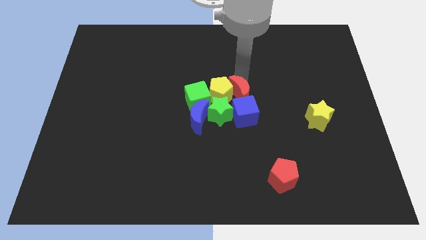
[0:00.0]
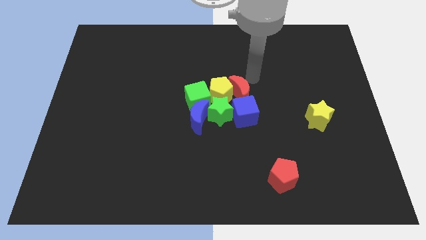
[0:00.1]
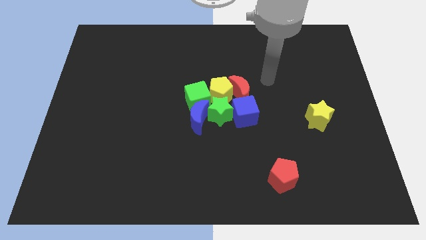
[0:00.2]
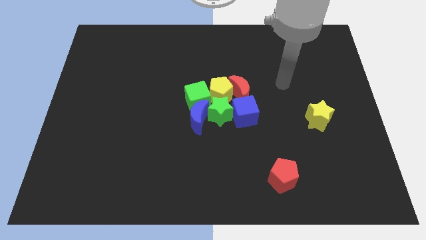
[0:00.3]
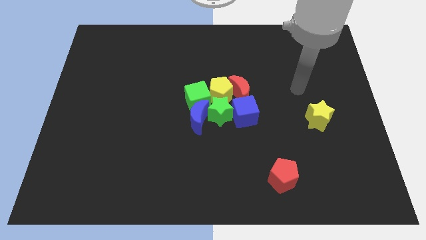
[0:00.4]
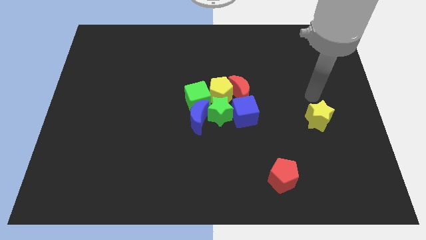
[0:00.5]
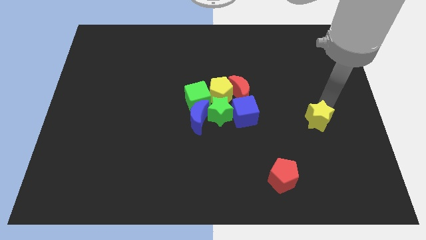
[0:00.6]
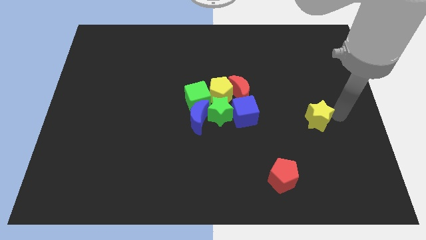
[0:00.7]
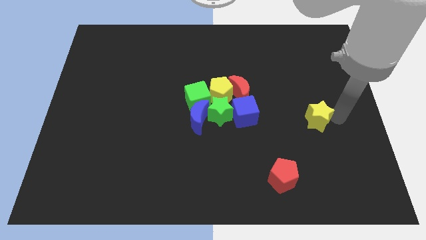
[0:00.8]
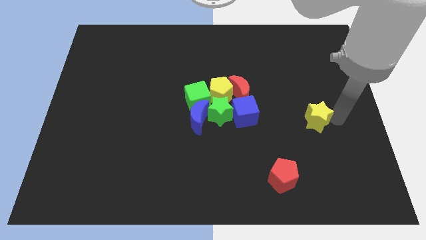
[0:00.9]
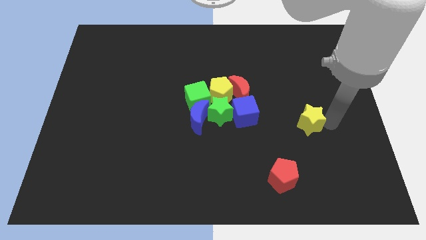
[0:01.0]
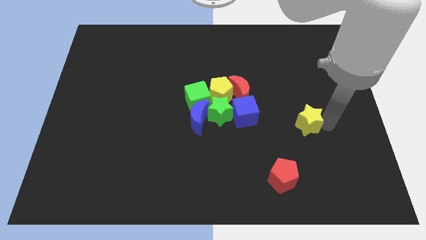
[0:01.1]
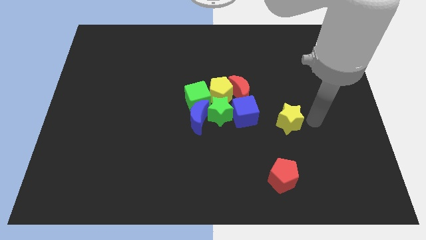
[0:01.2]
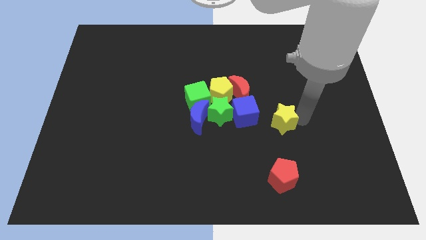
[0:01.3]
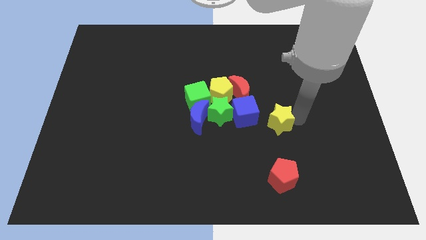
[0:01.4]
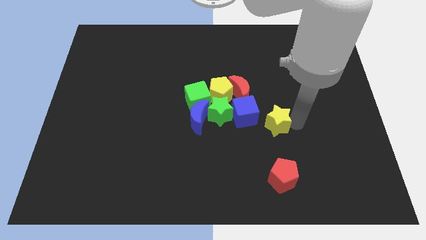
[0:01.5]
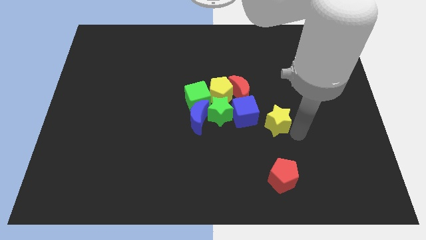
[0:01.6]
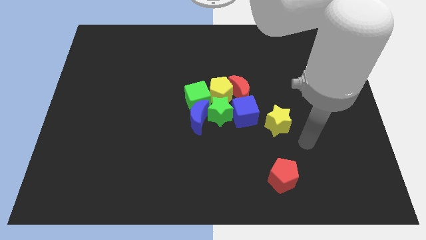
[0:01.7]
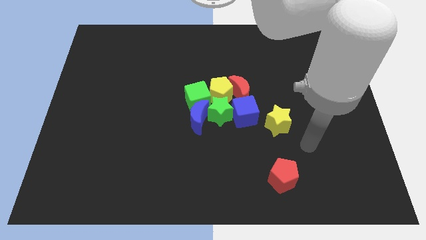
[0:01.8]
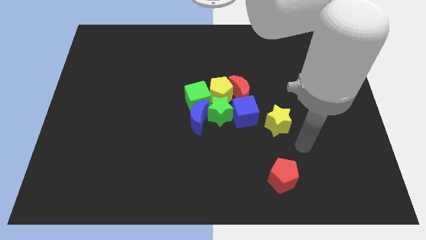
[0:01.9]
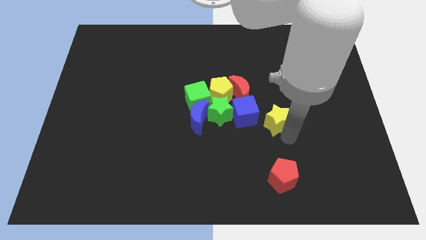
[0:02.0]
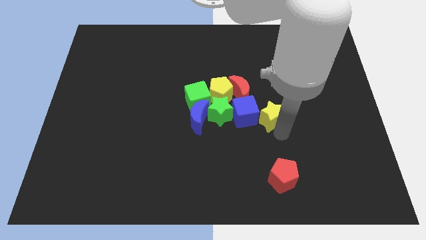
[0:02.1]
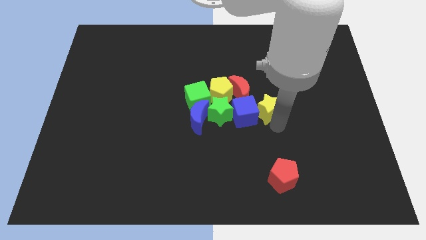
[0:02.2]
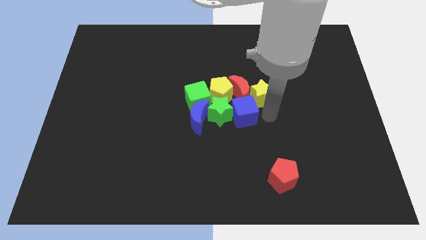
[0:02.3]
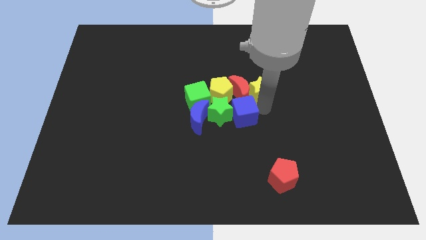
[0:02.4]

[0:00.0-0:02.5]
place the yellow star to the right side of red moon and blue cube

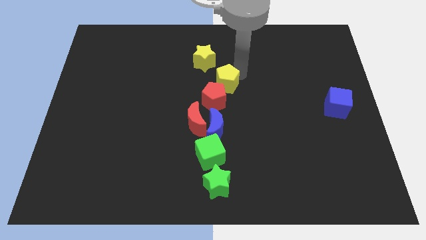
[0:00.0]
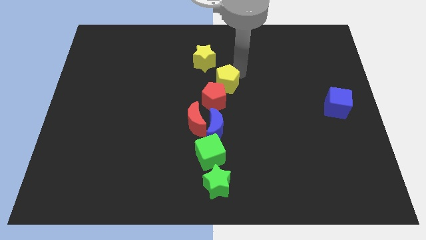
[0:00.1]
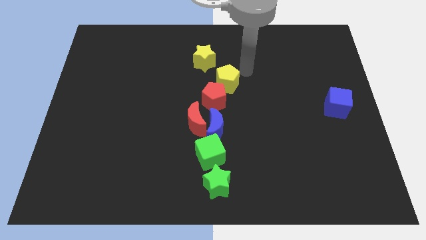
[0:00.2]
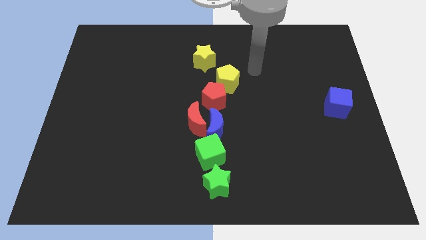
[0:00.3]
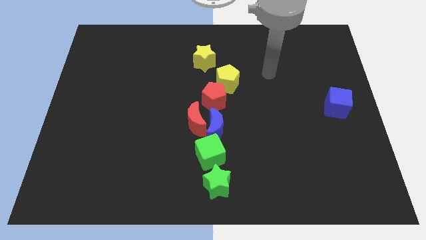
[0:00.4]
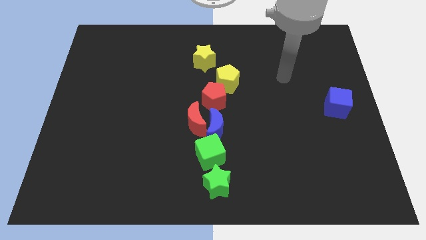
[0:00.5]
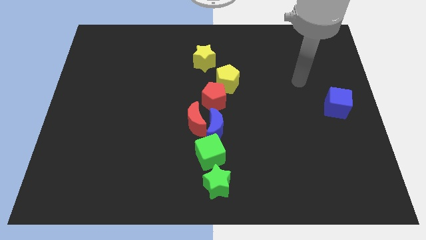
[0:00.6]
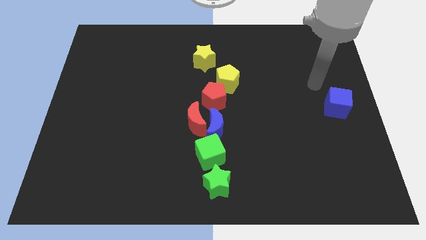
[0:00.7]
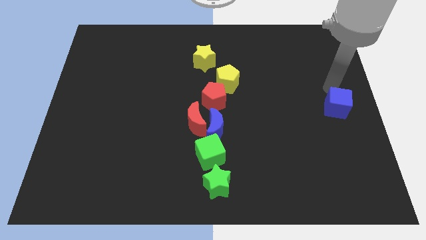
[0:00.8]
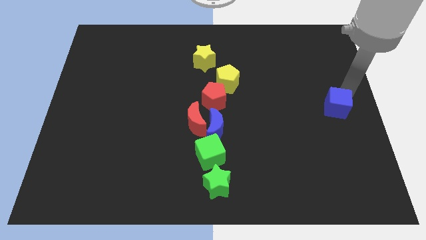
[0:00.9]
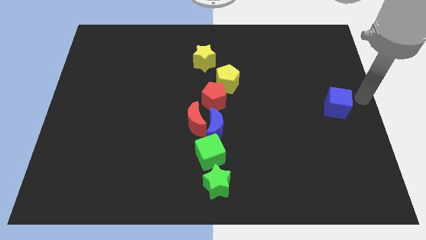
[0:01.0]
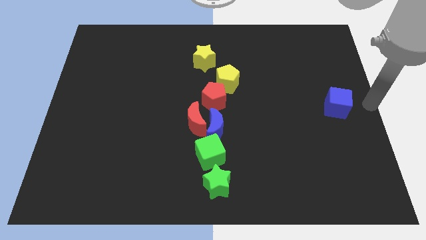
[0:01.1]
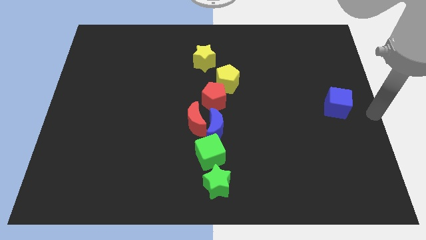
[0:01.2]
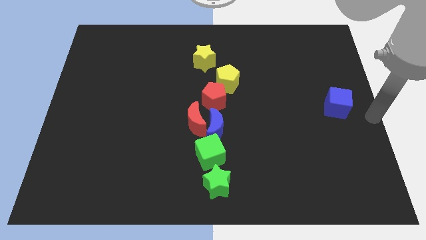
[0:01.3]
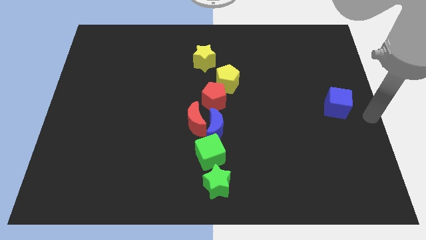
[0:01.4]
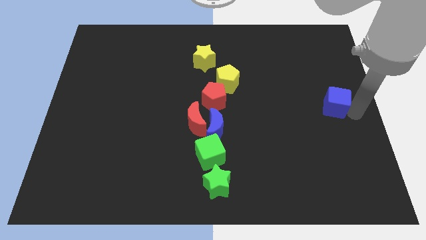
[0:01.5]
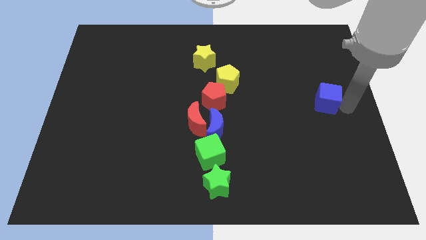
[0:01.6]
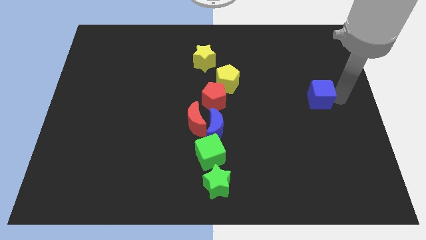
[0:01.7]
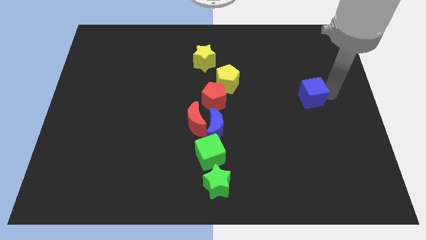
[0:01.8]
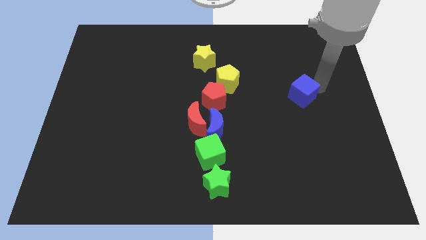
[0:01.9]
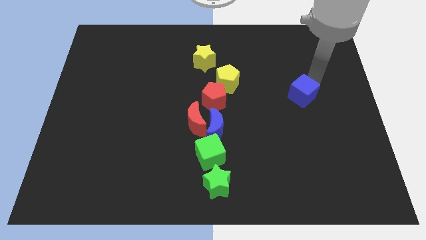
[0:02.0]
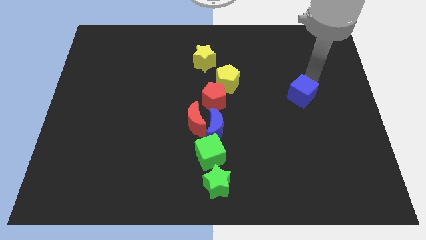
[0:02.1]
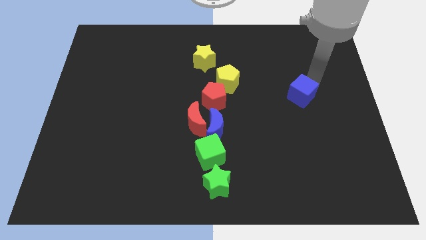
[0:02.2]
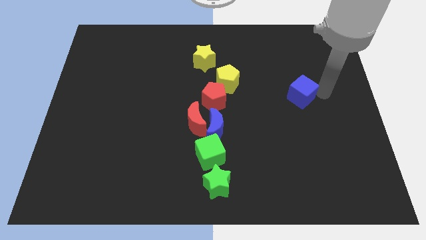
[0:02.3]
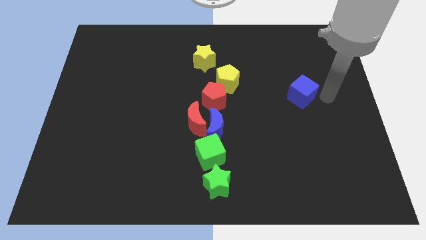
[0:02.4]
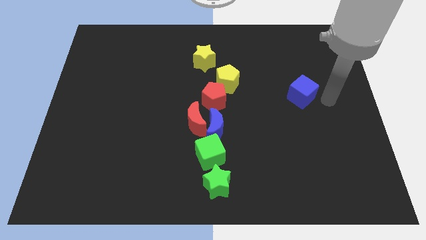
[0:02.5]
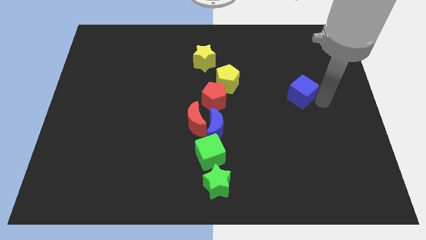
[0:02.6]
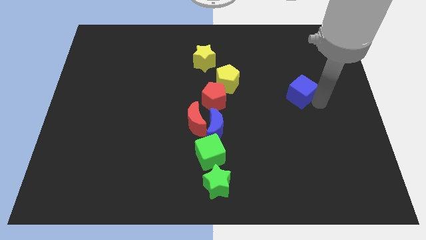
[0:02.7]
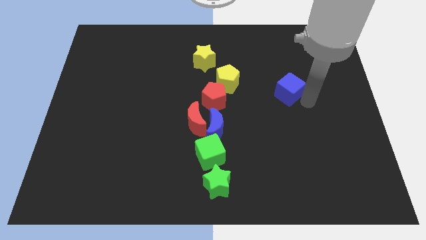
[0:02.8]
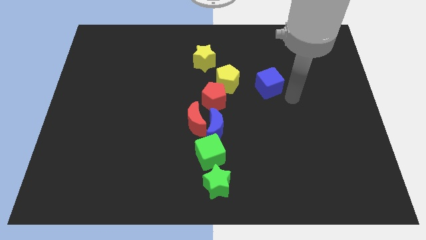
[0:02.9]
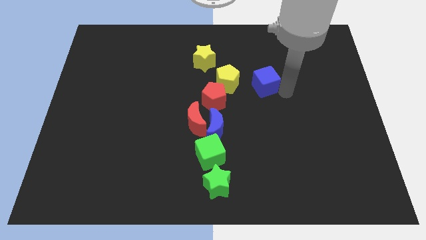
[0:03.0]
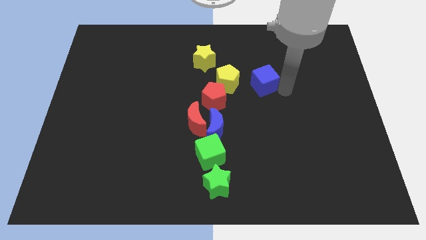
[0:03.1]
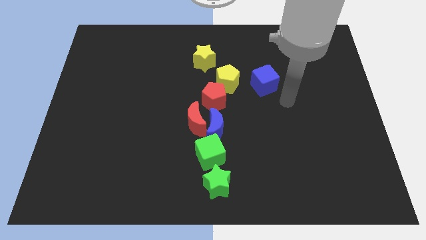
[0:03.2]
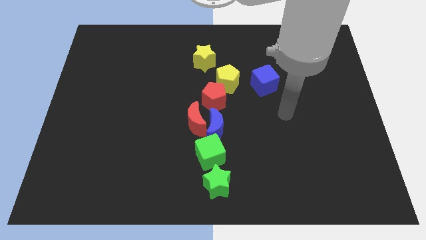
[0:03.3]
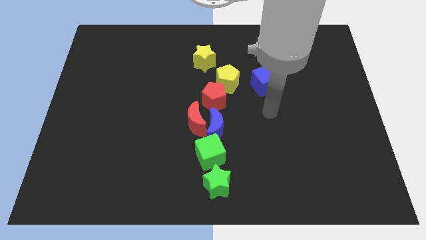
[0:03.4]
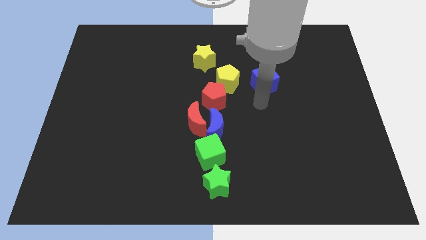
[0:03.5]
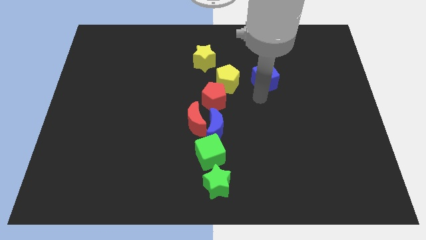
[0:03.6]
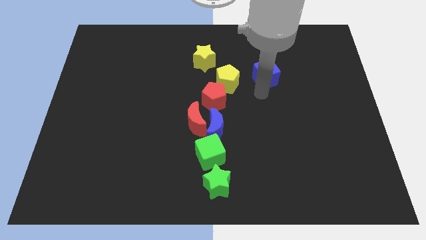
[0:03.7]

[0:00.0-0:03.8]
place the blue cube horizontally to the right side of the yellow pentagon

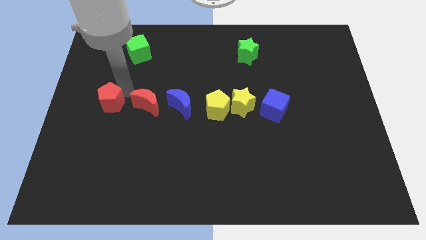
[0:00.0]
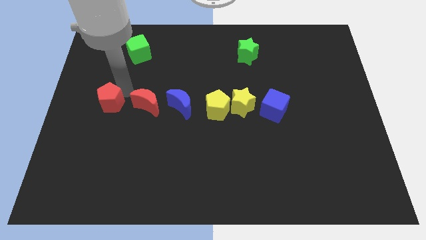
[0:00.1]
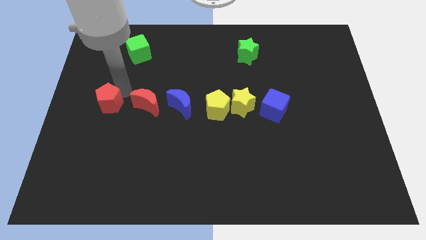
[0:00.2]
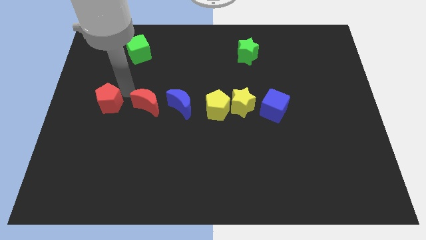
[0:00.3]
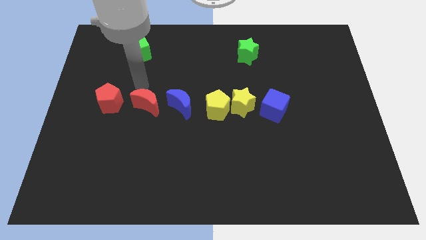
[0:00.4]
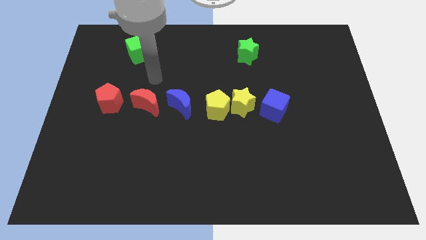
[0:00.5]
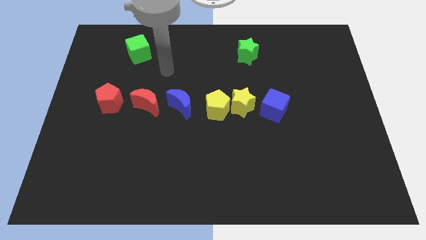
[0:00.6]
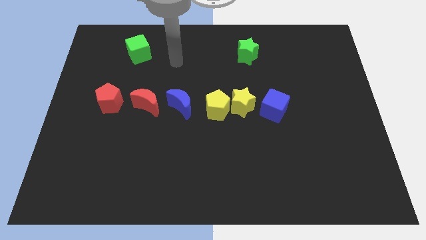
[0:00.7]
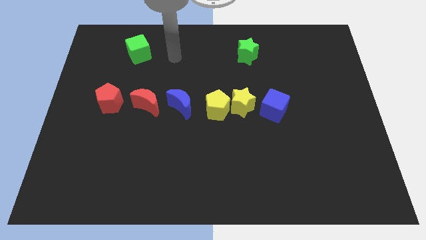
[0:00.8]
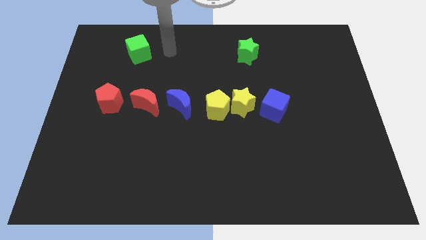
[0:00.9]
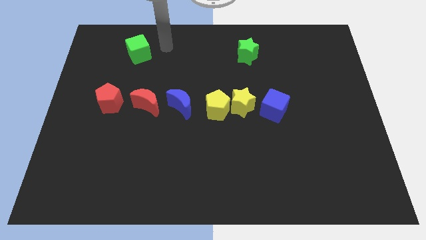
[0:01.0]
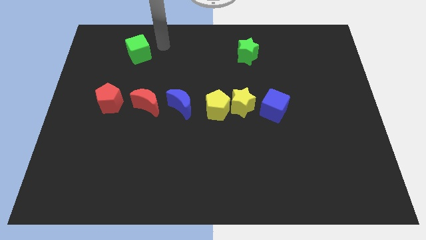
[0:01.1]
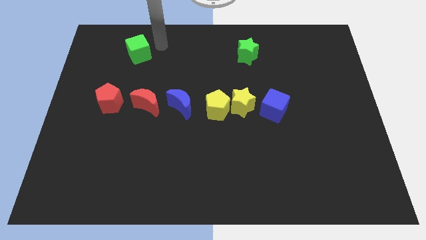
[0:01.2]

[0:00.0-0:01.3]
move yourself away from the red pentagon

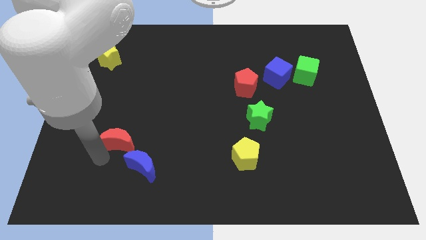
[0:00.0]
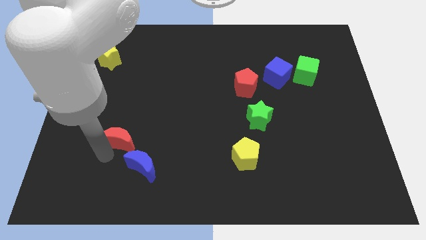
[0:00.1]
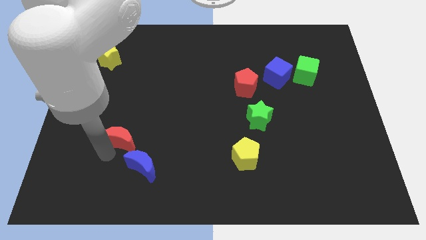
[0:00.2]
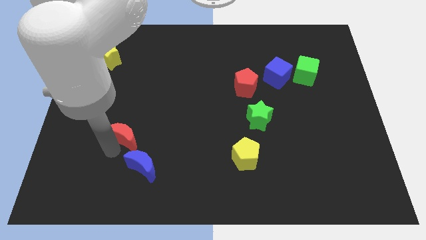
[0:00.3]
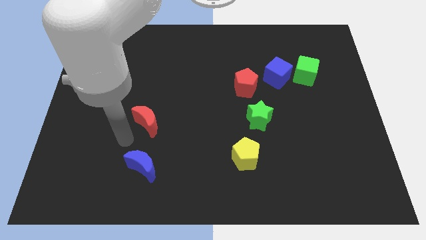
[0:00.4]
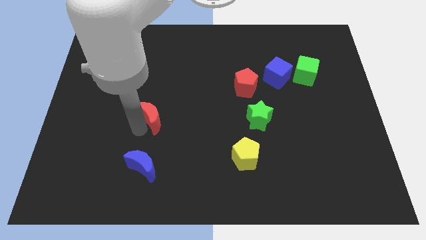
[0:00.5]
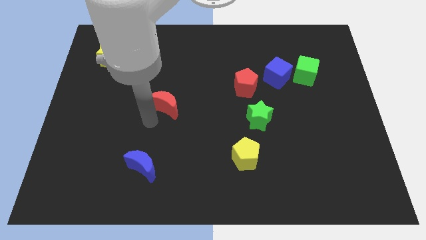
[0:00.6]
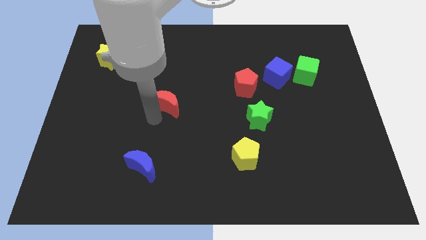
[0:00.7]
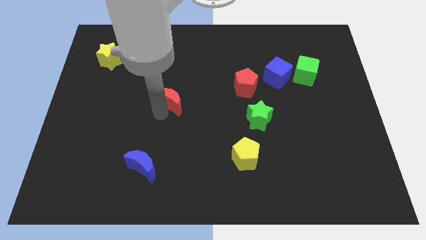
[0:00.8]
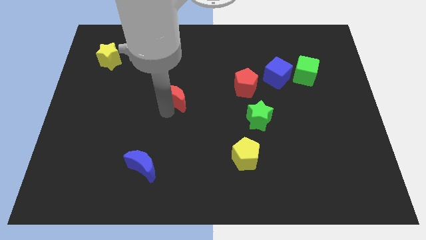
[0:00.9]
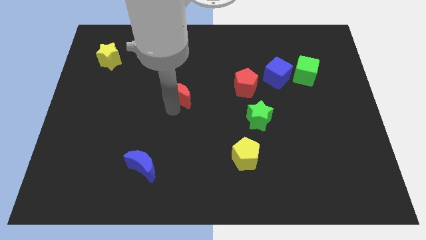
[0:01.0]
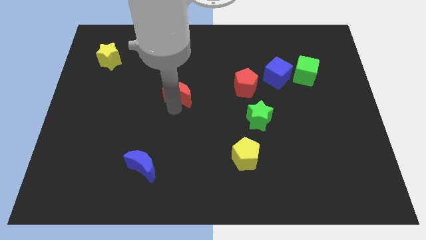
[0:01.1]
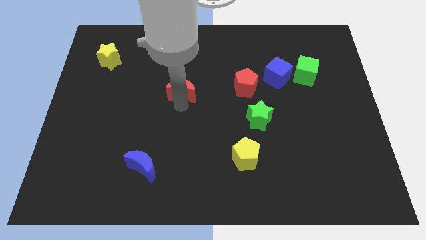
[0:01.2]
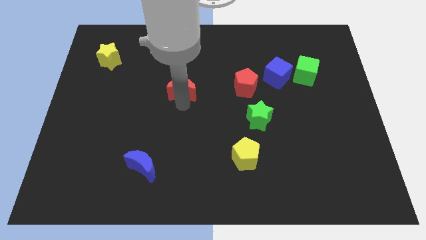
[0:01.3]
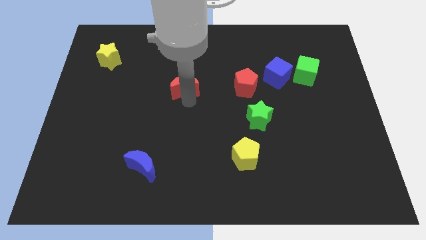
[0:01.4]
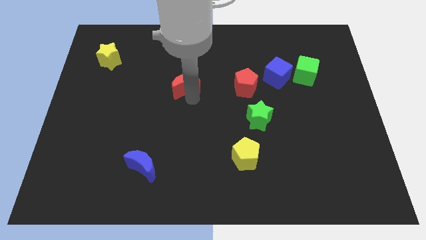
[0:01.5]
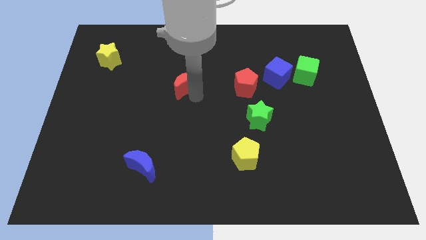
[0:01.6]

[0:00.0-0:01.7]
push the red crescent to the center
